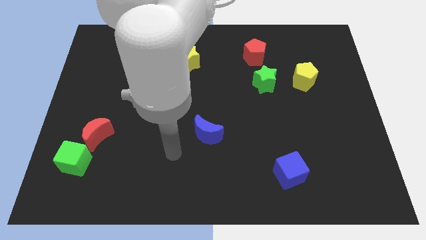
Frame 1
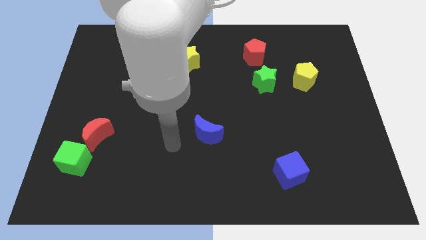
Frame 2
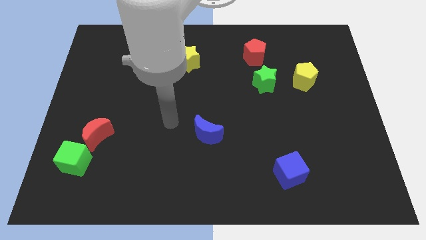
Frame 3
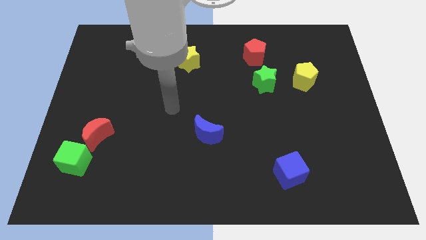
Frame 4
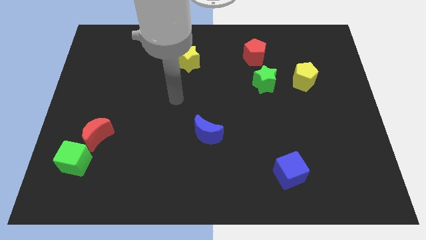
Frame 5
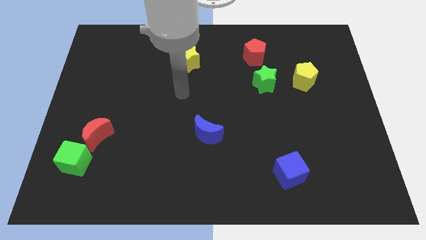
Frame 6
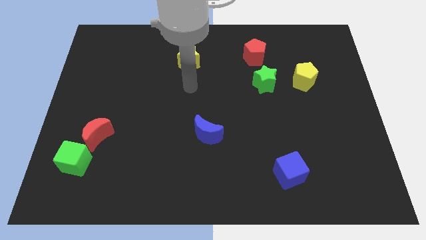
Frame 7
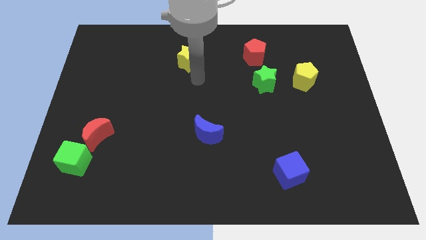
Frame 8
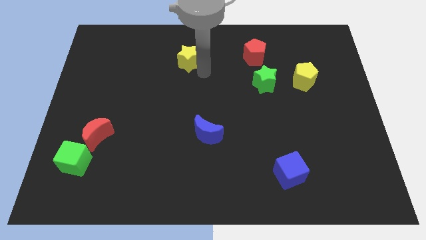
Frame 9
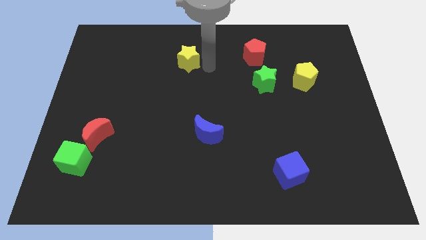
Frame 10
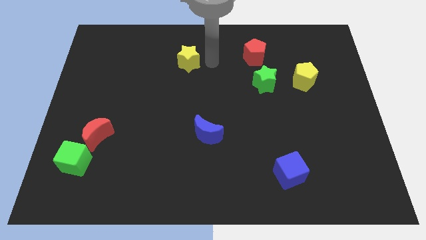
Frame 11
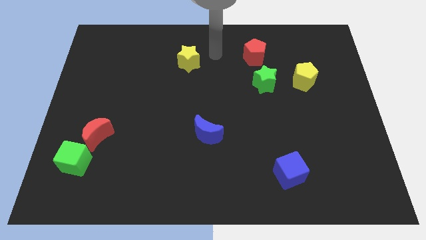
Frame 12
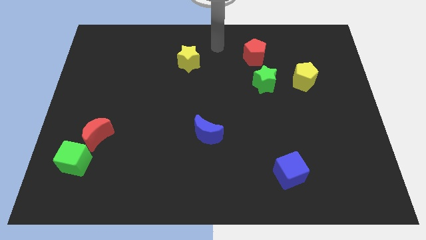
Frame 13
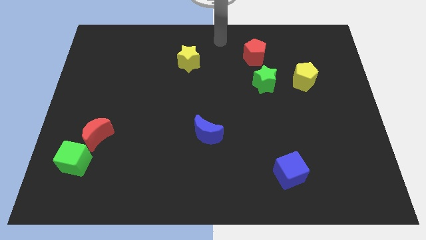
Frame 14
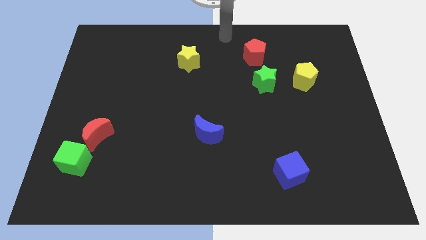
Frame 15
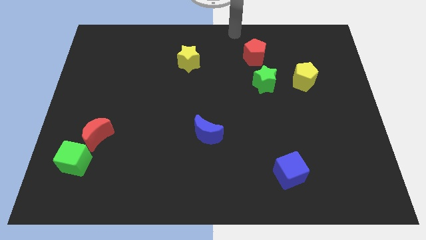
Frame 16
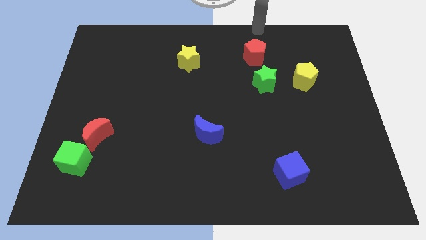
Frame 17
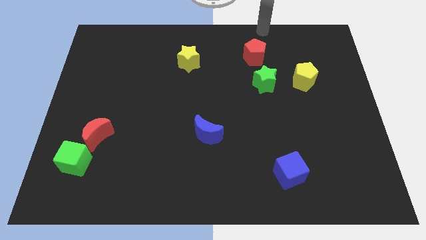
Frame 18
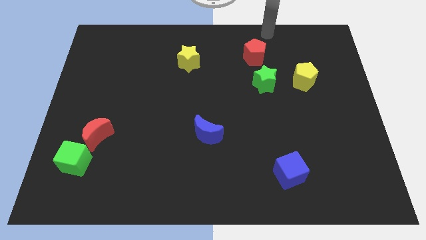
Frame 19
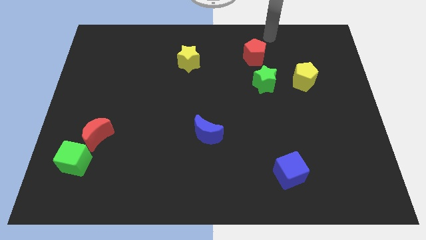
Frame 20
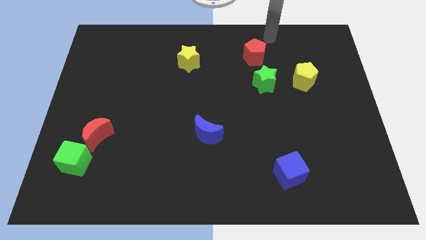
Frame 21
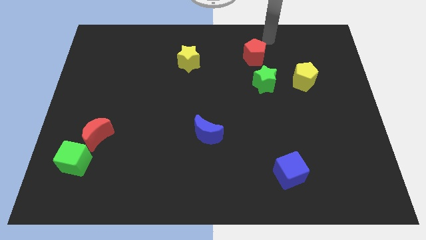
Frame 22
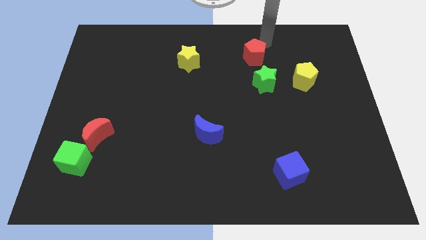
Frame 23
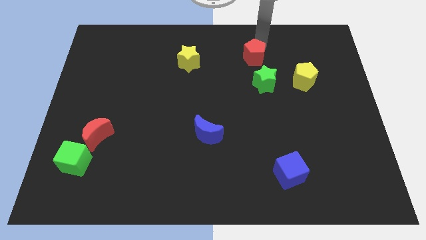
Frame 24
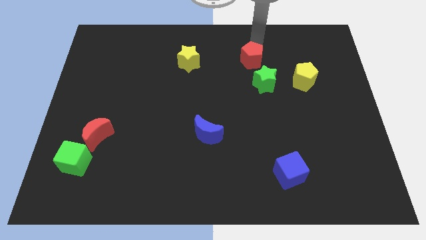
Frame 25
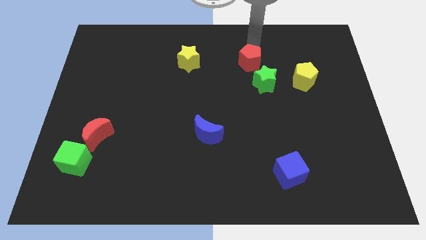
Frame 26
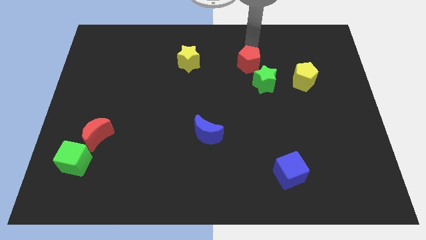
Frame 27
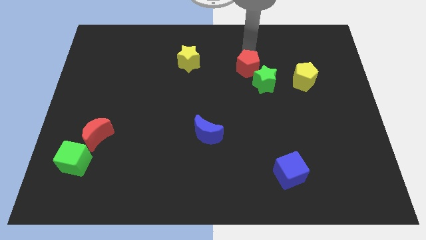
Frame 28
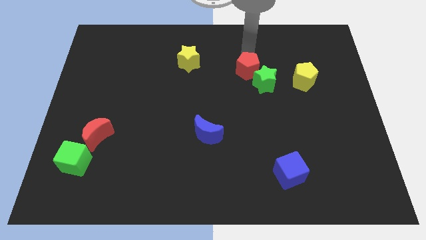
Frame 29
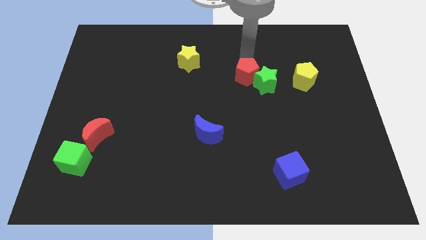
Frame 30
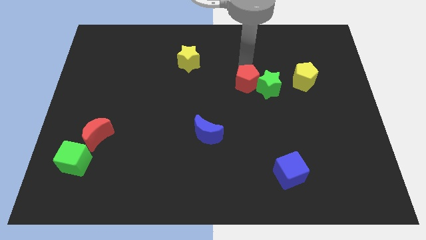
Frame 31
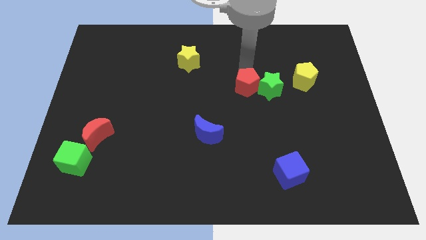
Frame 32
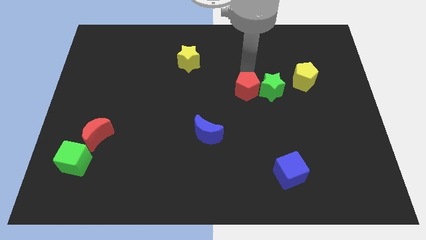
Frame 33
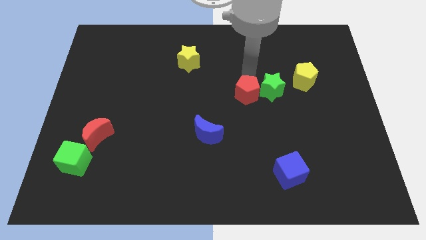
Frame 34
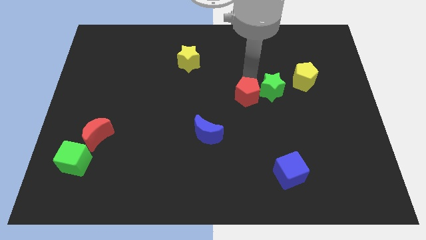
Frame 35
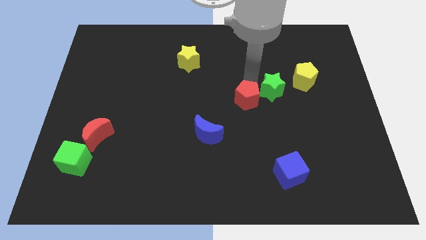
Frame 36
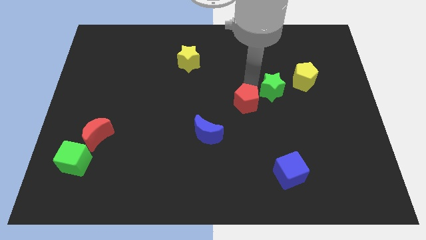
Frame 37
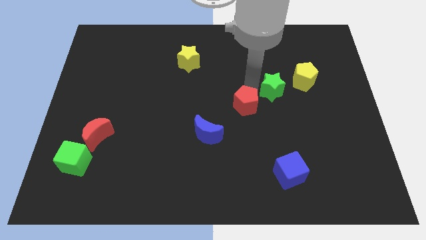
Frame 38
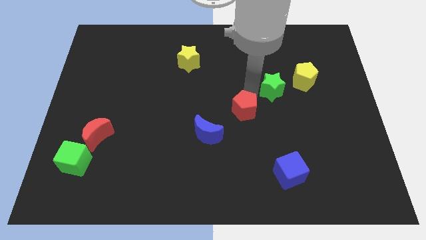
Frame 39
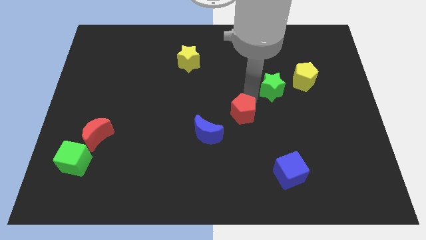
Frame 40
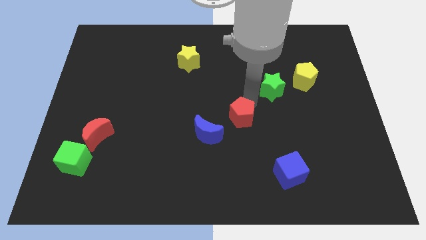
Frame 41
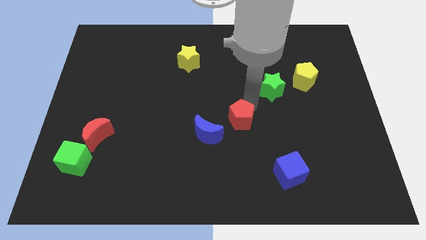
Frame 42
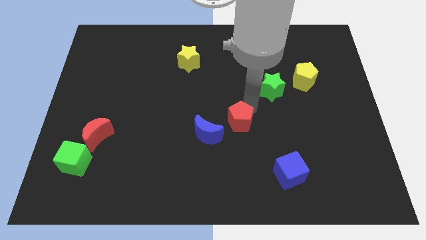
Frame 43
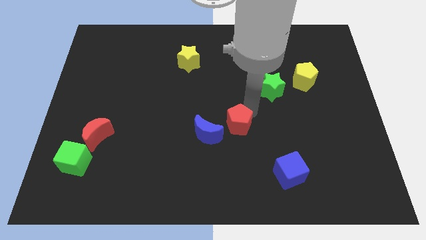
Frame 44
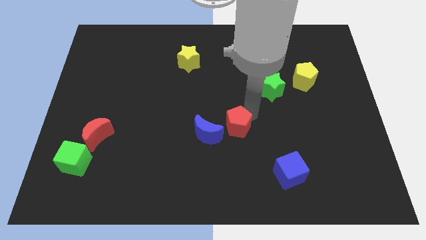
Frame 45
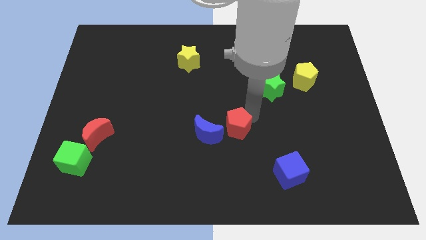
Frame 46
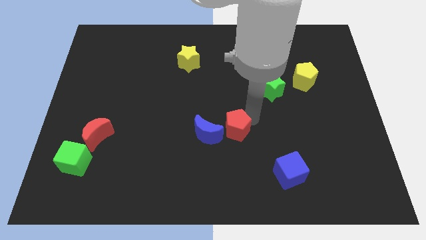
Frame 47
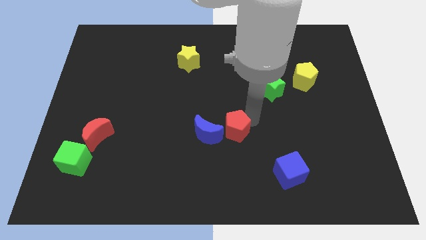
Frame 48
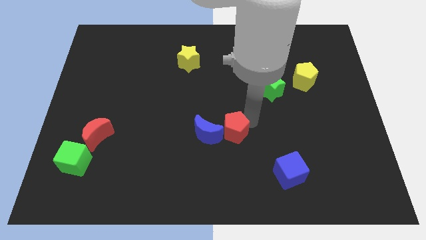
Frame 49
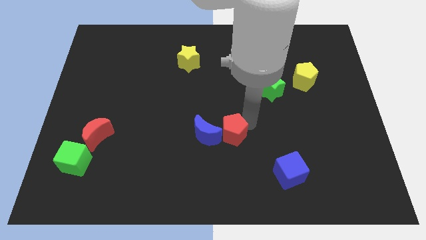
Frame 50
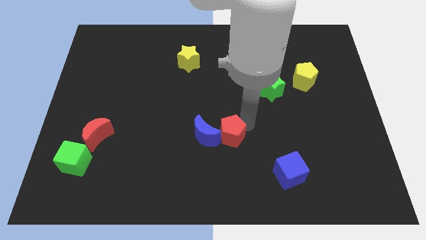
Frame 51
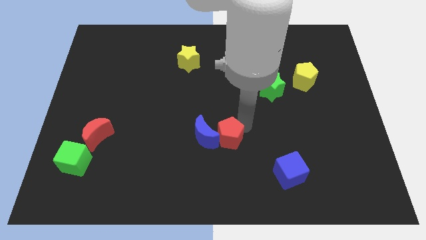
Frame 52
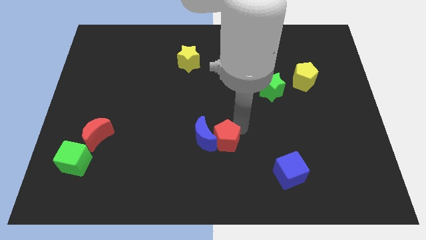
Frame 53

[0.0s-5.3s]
move the red pentagon to the blue moon

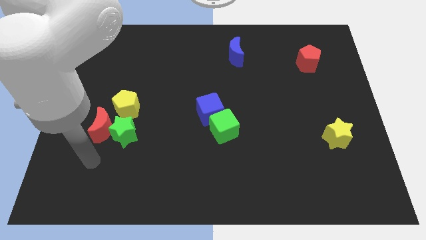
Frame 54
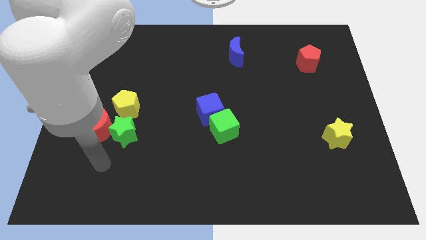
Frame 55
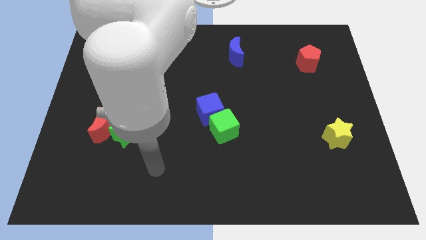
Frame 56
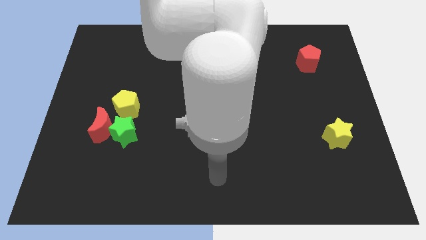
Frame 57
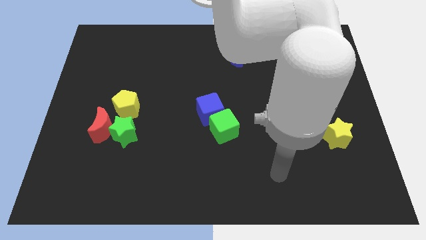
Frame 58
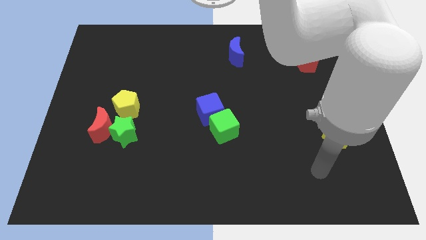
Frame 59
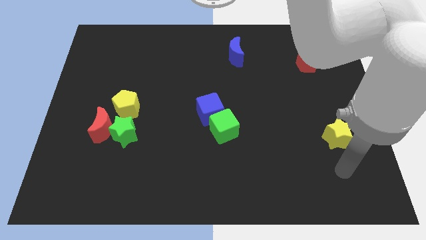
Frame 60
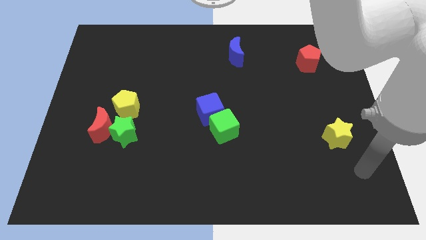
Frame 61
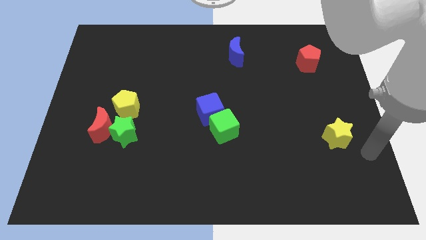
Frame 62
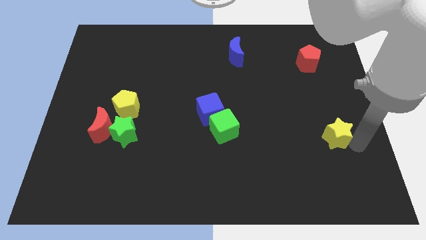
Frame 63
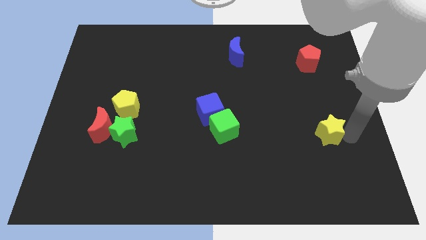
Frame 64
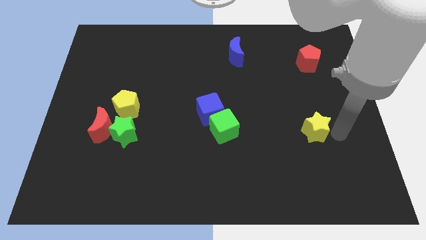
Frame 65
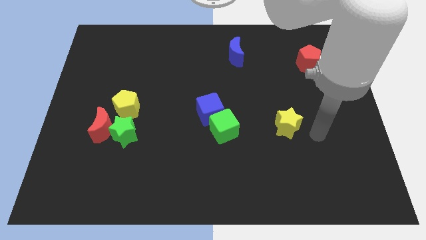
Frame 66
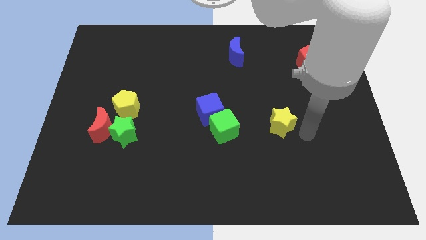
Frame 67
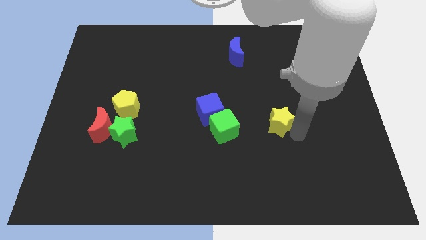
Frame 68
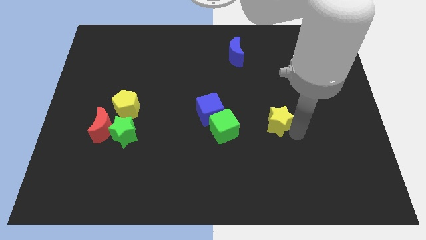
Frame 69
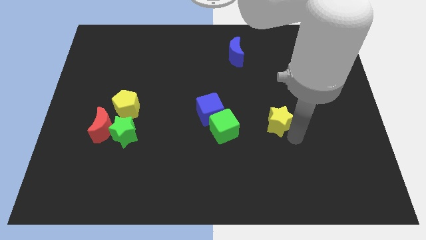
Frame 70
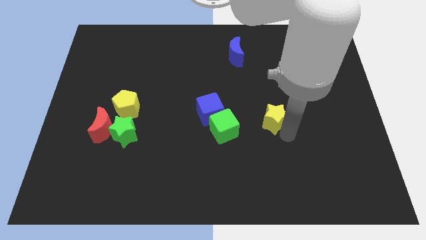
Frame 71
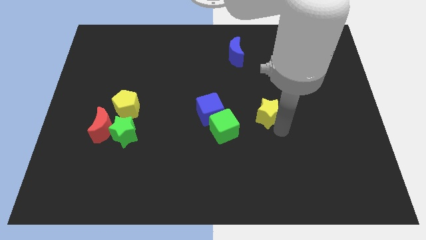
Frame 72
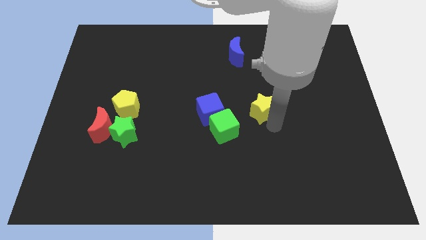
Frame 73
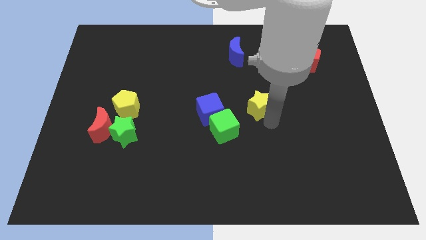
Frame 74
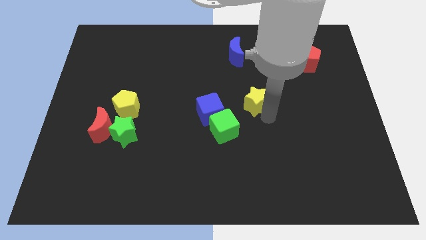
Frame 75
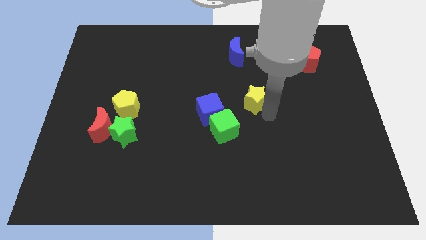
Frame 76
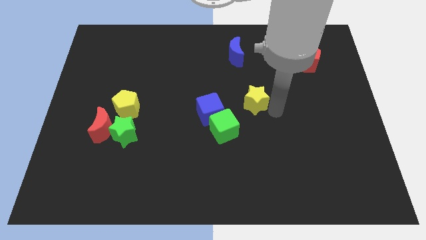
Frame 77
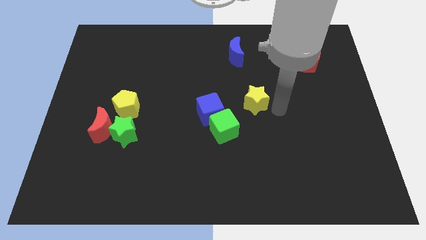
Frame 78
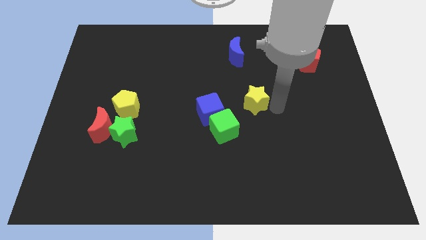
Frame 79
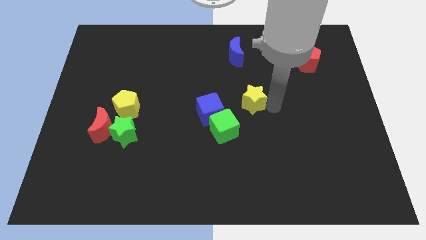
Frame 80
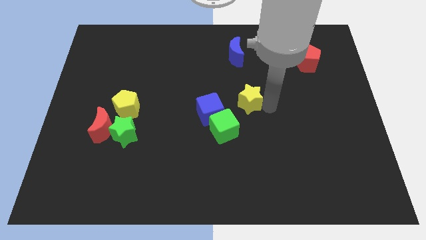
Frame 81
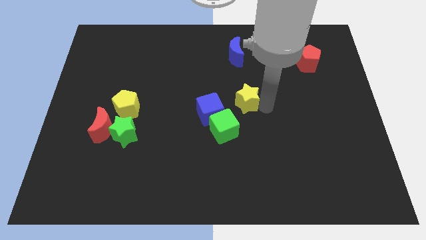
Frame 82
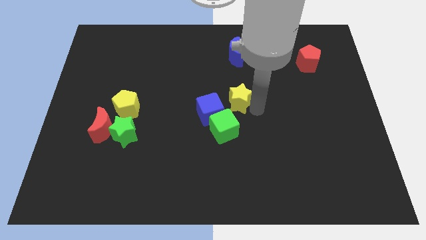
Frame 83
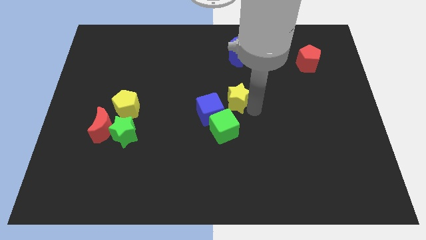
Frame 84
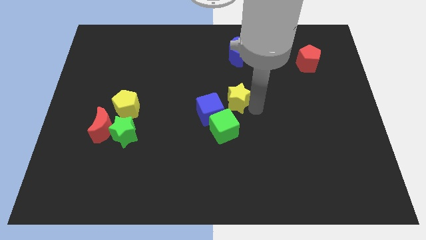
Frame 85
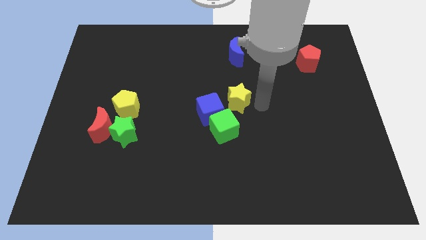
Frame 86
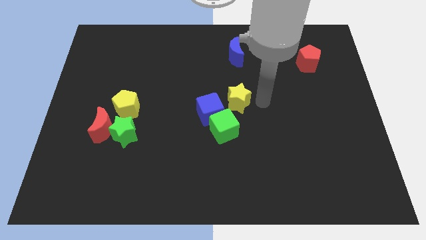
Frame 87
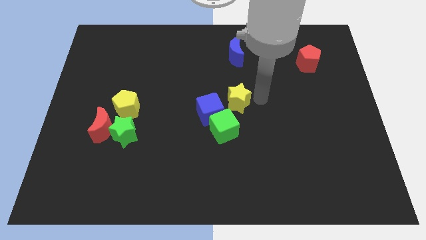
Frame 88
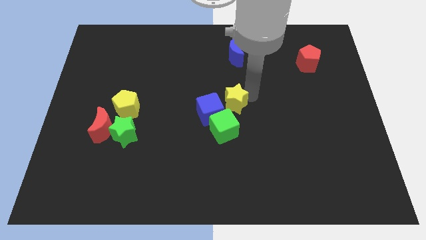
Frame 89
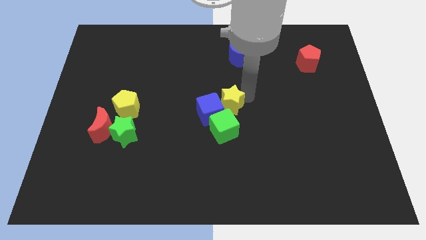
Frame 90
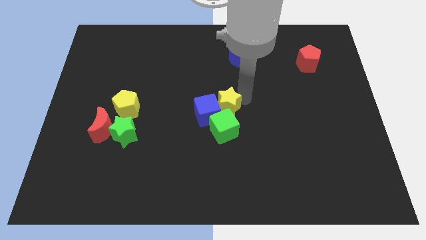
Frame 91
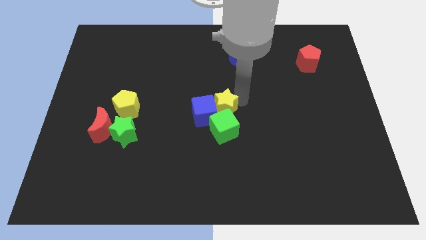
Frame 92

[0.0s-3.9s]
slide the yellow star towards the blue cube
